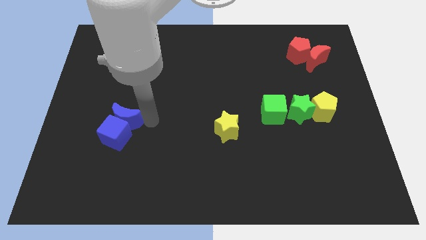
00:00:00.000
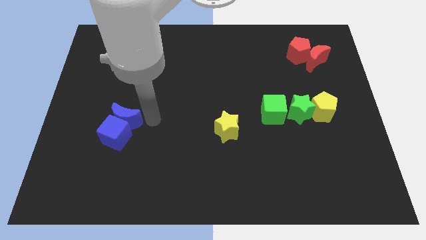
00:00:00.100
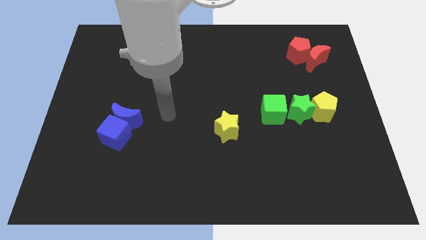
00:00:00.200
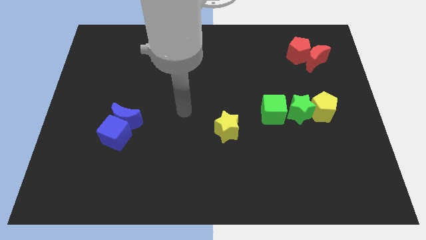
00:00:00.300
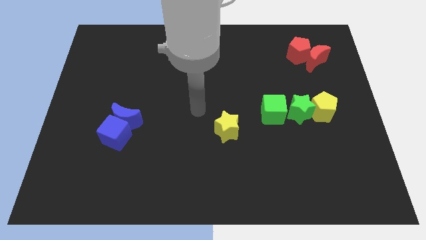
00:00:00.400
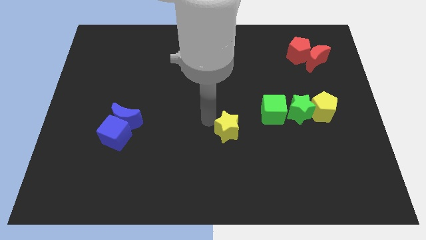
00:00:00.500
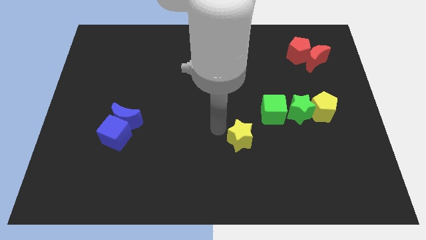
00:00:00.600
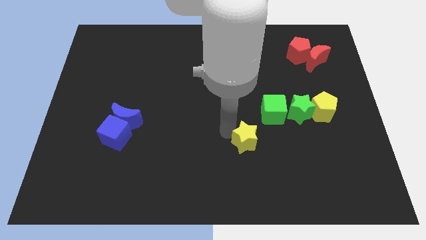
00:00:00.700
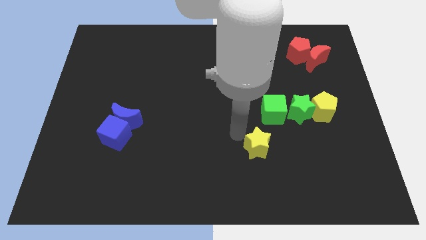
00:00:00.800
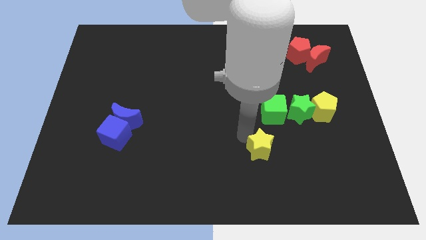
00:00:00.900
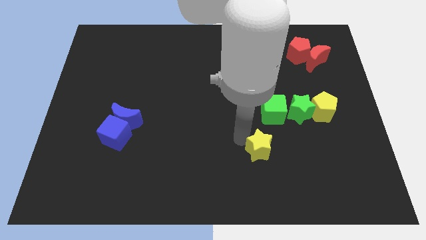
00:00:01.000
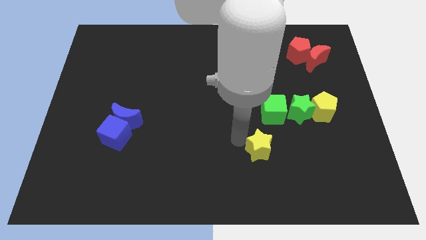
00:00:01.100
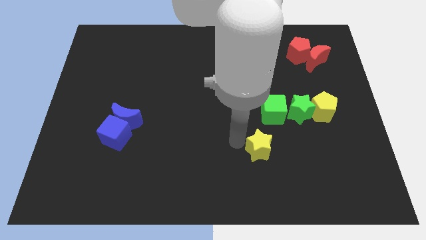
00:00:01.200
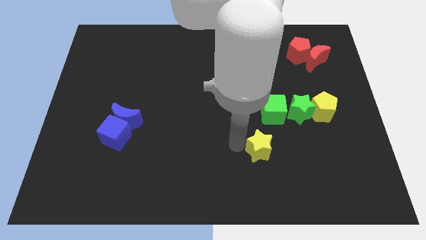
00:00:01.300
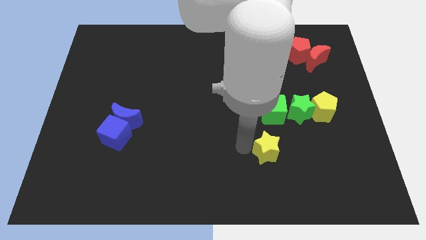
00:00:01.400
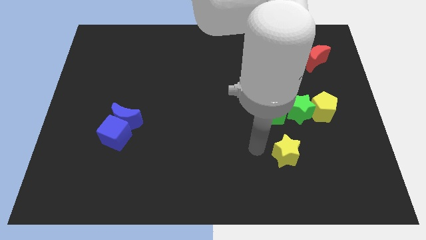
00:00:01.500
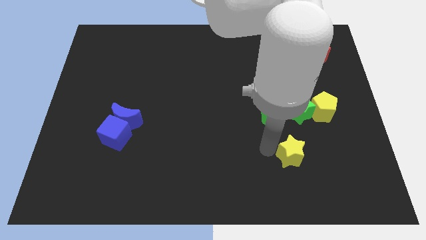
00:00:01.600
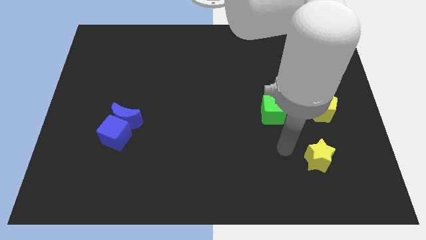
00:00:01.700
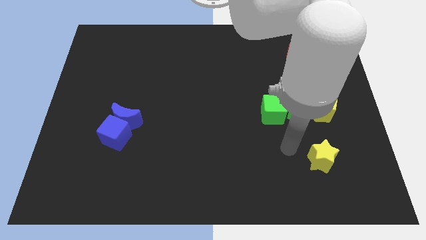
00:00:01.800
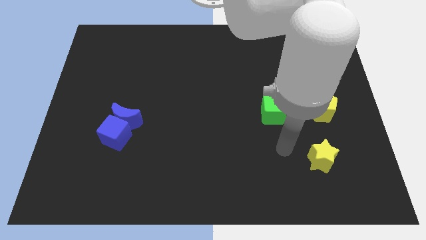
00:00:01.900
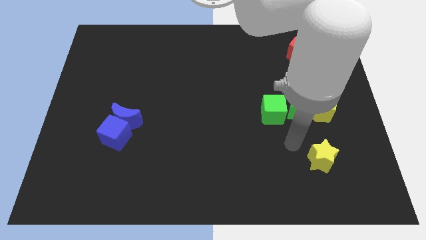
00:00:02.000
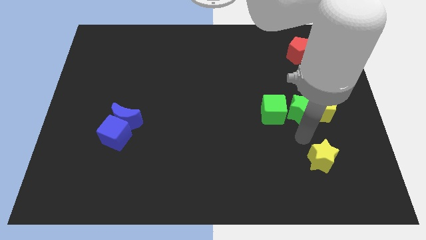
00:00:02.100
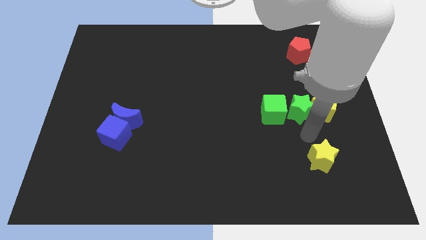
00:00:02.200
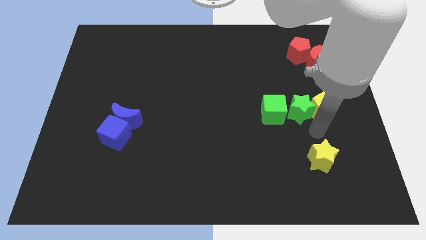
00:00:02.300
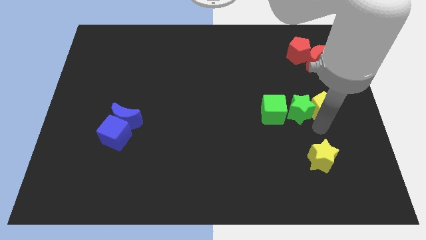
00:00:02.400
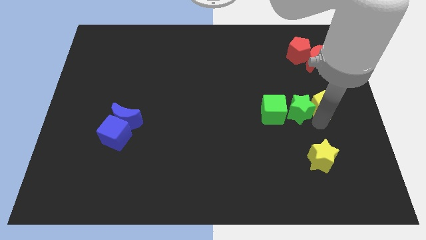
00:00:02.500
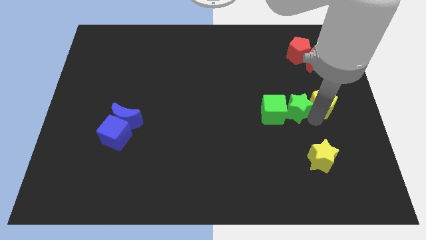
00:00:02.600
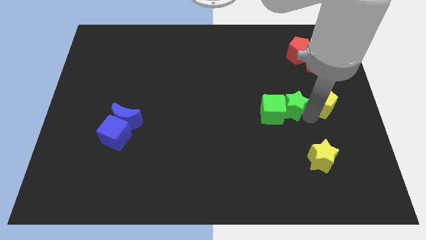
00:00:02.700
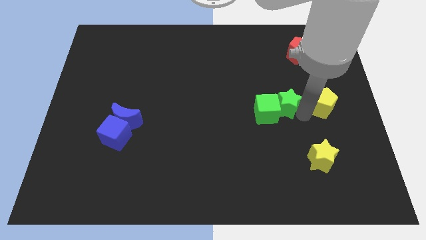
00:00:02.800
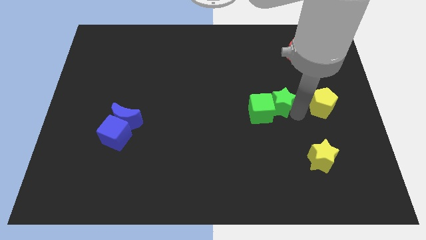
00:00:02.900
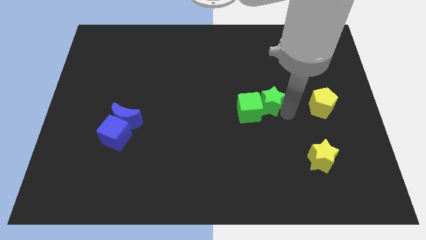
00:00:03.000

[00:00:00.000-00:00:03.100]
put the yellow star below the yellow pentagon

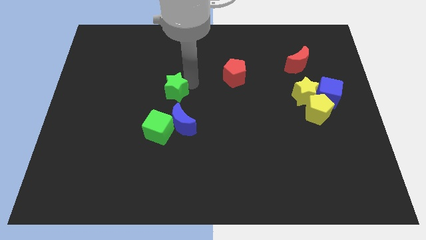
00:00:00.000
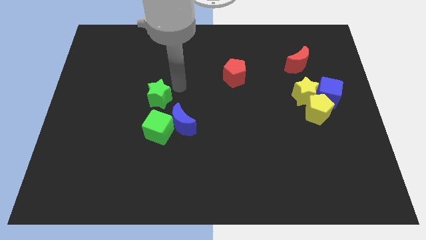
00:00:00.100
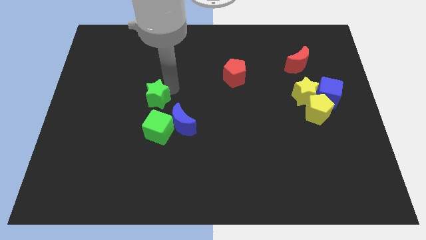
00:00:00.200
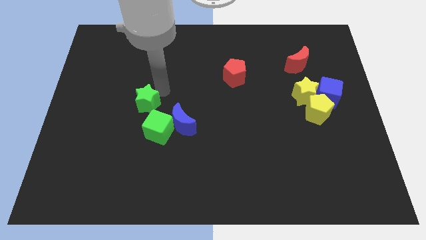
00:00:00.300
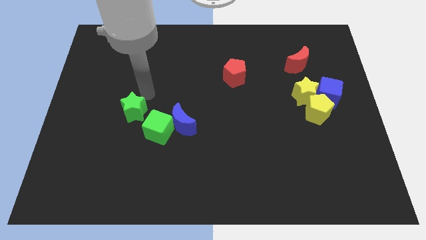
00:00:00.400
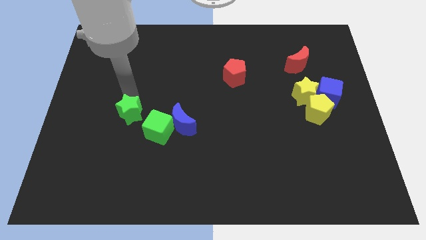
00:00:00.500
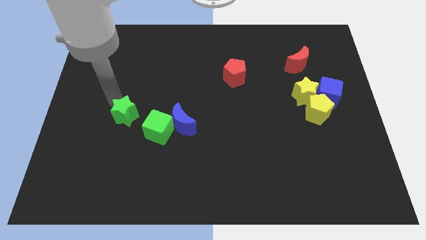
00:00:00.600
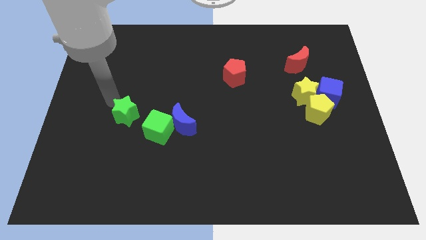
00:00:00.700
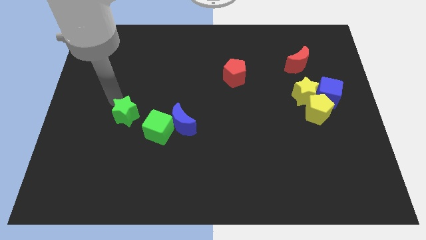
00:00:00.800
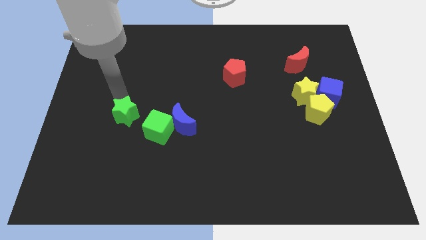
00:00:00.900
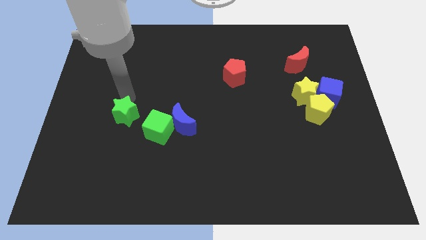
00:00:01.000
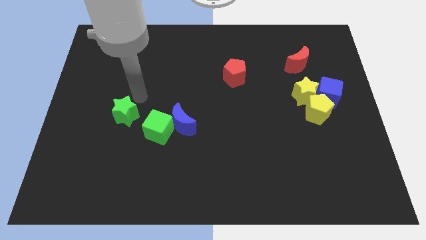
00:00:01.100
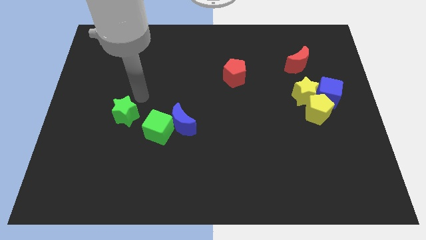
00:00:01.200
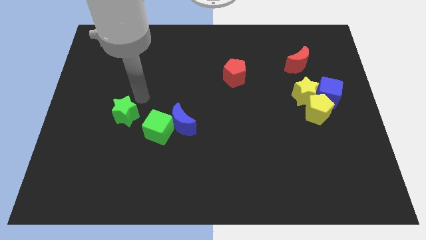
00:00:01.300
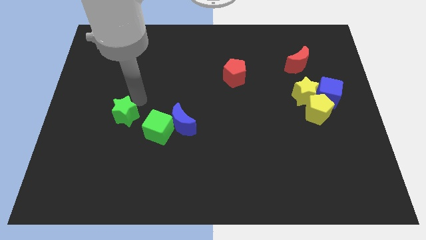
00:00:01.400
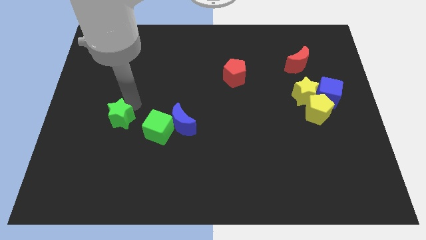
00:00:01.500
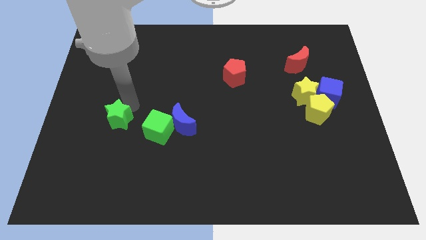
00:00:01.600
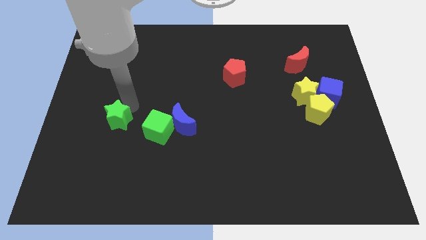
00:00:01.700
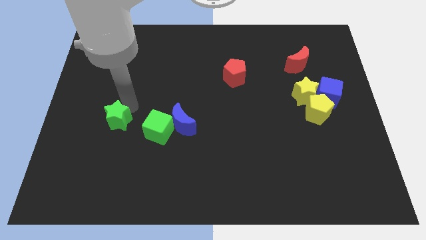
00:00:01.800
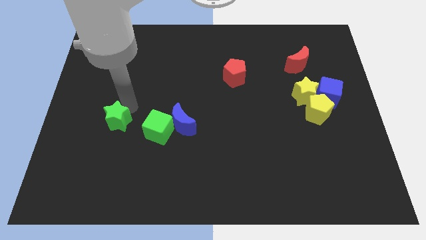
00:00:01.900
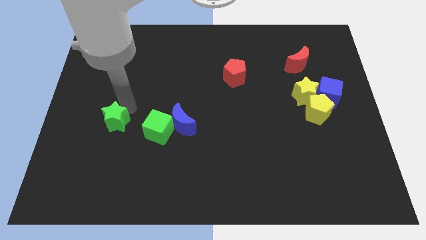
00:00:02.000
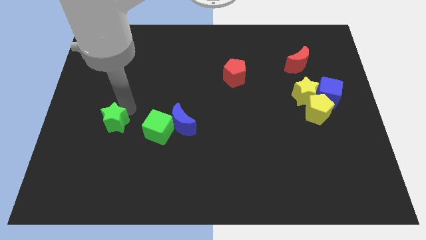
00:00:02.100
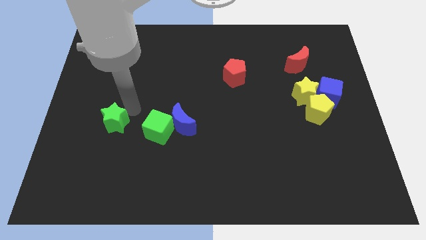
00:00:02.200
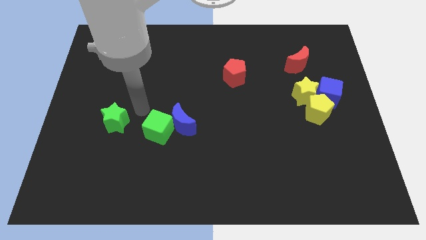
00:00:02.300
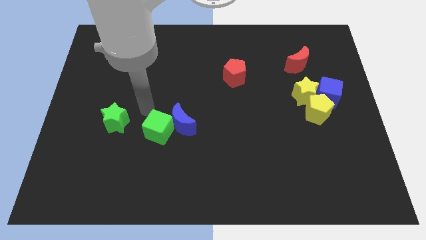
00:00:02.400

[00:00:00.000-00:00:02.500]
move green star to the left of green cube

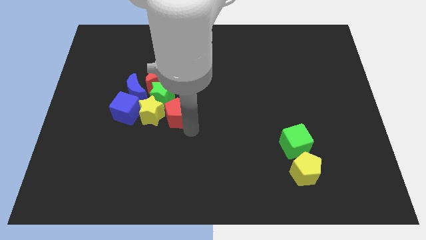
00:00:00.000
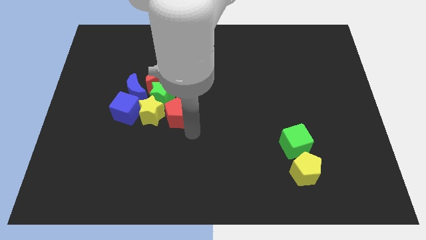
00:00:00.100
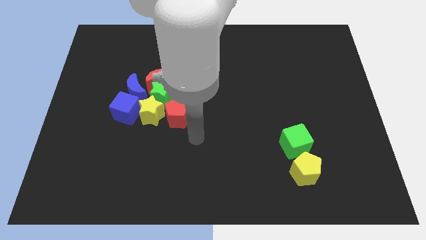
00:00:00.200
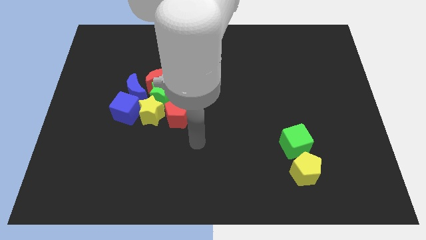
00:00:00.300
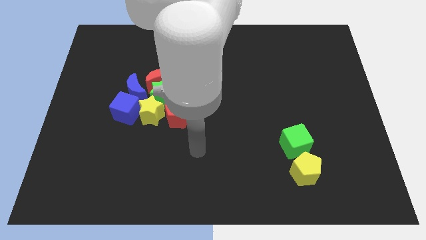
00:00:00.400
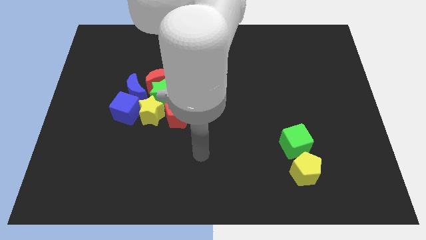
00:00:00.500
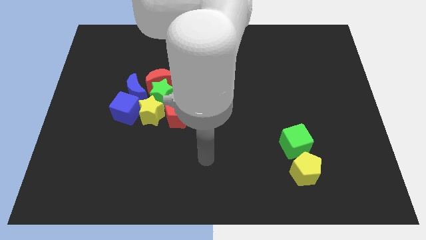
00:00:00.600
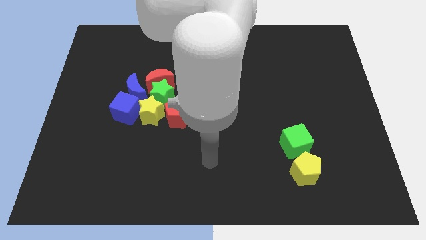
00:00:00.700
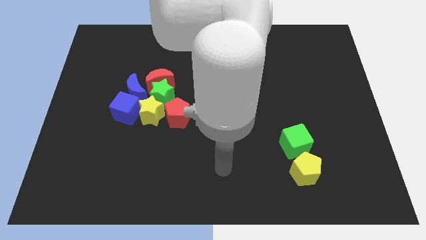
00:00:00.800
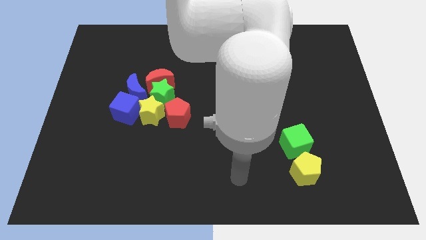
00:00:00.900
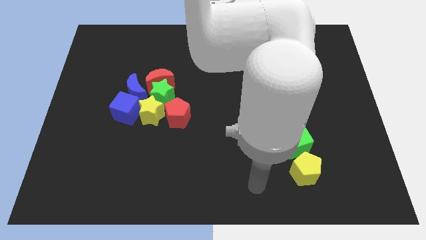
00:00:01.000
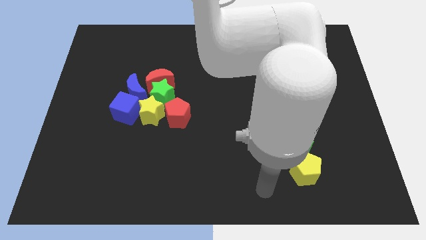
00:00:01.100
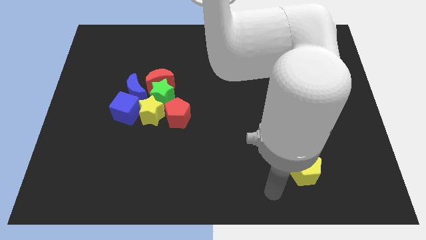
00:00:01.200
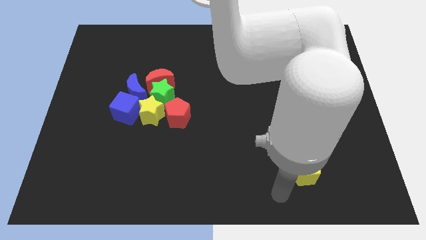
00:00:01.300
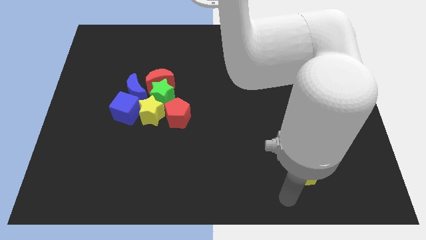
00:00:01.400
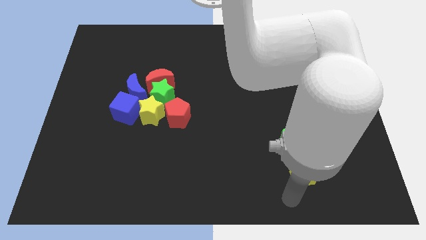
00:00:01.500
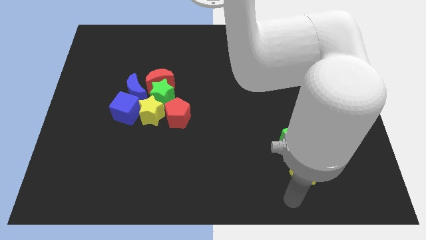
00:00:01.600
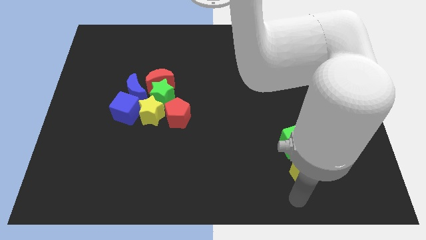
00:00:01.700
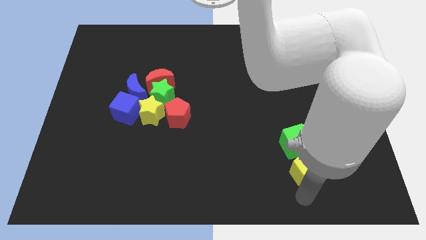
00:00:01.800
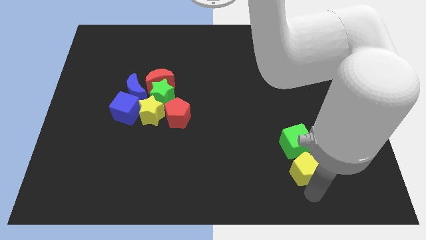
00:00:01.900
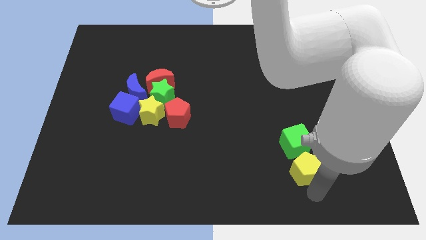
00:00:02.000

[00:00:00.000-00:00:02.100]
put your arm below the yellow pentagon

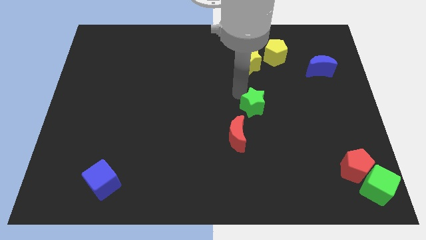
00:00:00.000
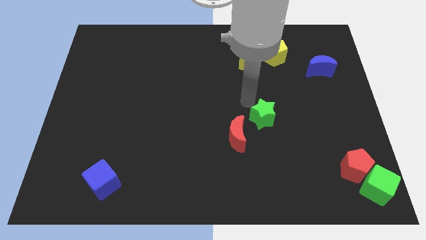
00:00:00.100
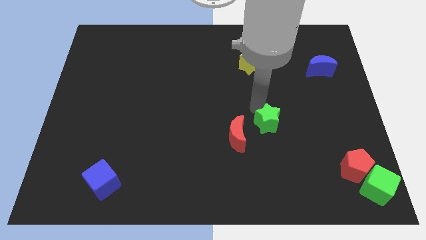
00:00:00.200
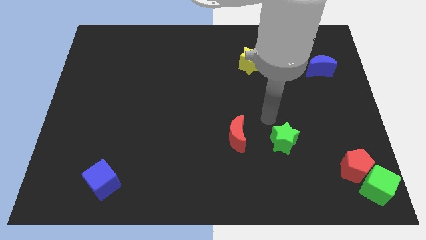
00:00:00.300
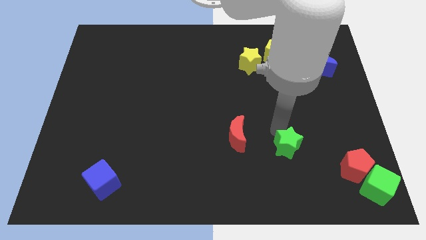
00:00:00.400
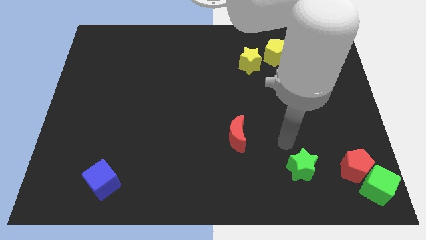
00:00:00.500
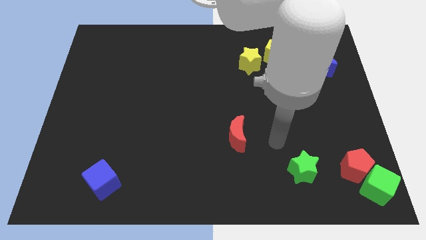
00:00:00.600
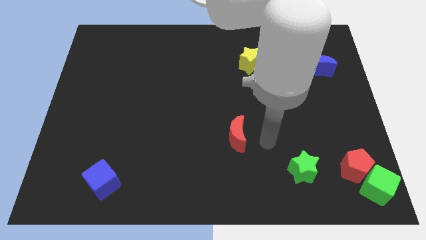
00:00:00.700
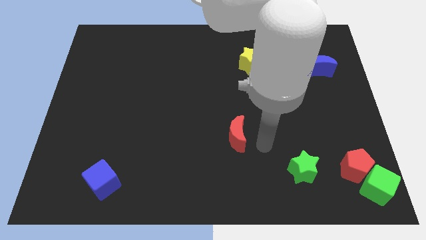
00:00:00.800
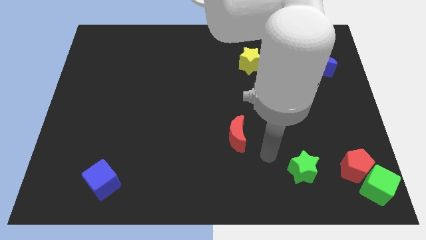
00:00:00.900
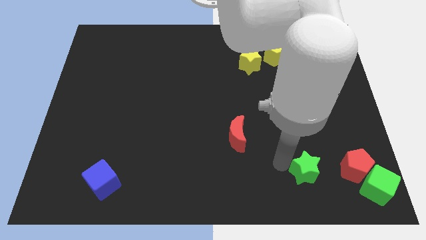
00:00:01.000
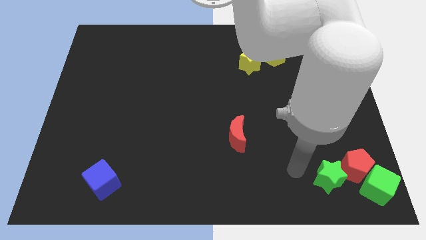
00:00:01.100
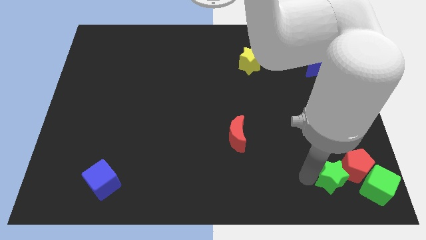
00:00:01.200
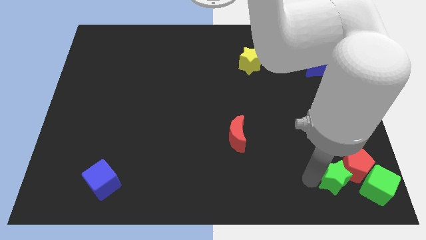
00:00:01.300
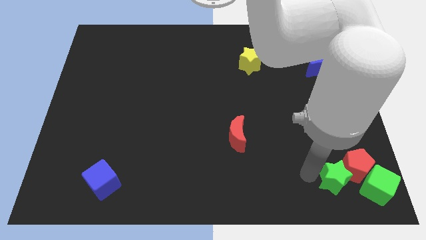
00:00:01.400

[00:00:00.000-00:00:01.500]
place the green star at the bottom left of the red pentagon
